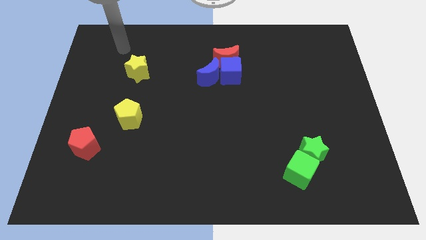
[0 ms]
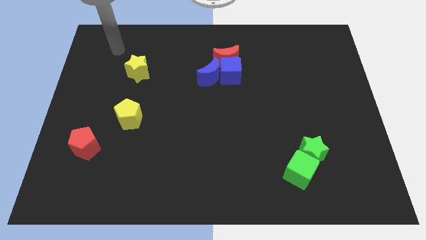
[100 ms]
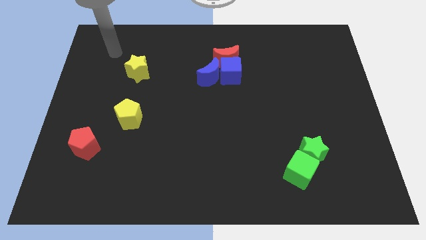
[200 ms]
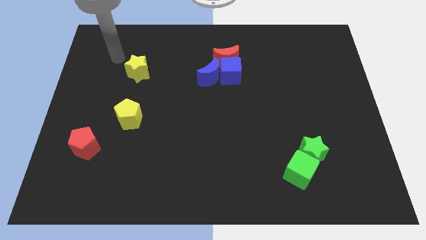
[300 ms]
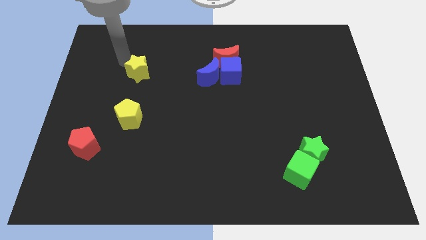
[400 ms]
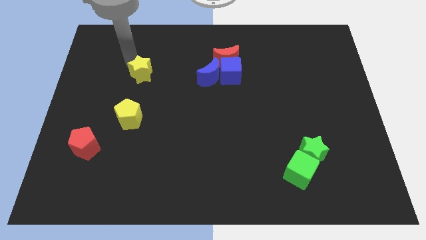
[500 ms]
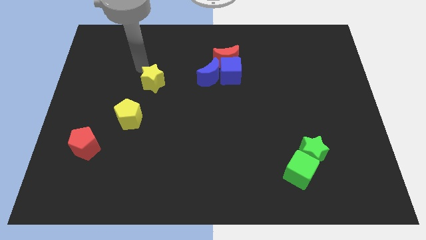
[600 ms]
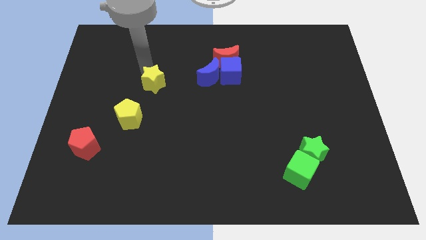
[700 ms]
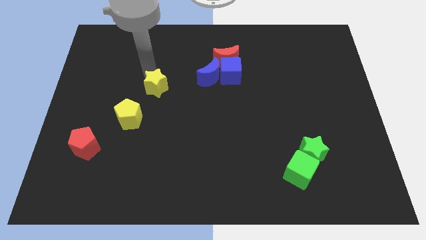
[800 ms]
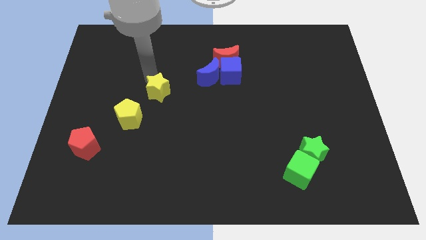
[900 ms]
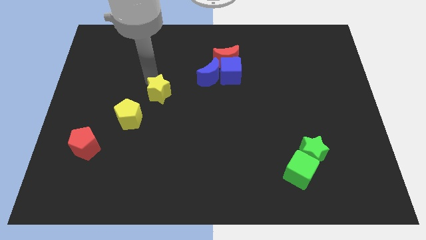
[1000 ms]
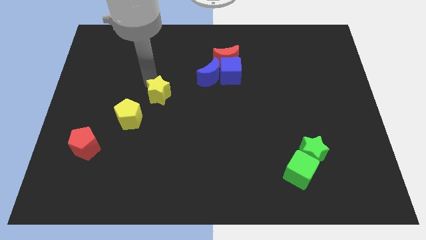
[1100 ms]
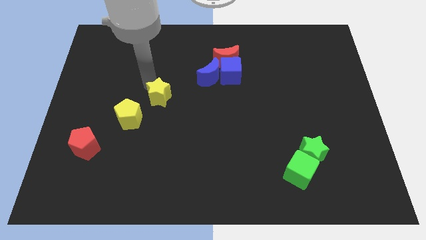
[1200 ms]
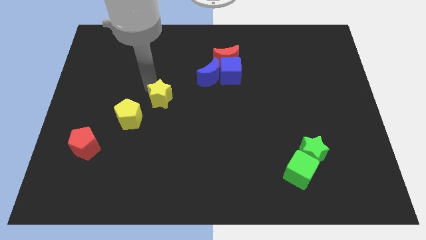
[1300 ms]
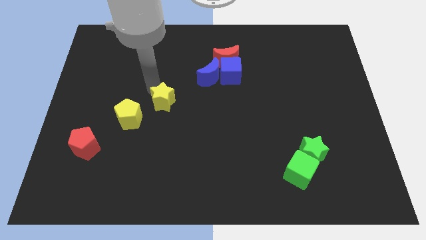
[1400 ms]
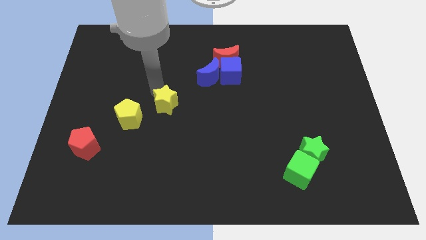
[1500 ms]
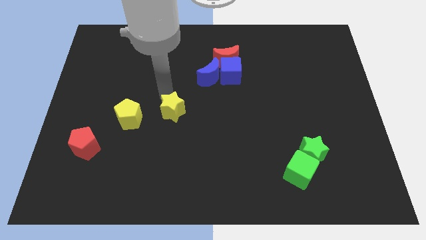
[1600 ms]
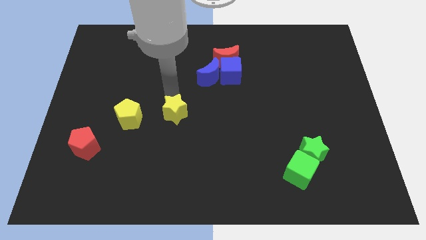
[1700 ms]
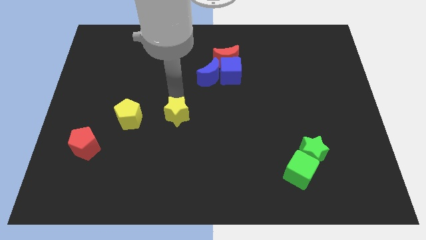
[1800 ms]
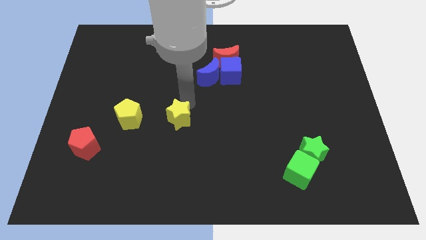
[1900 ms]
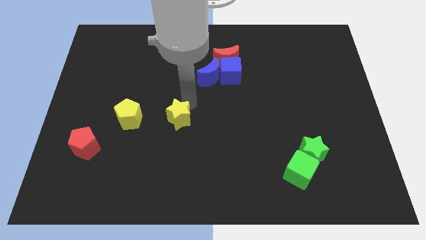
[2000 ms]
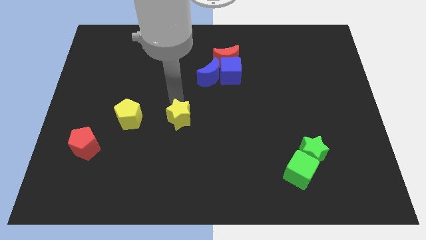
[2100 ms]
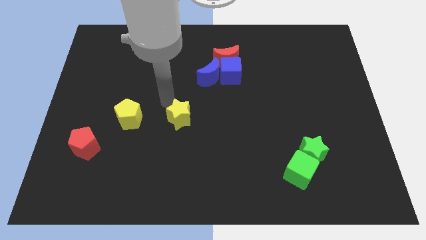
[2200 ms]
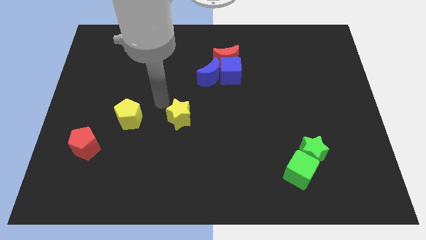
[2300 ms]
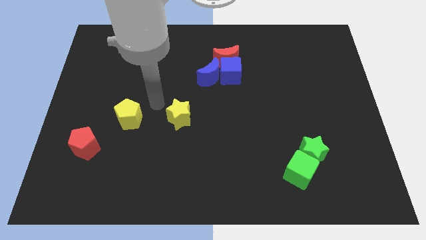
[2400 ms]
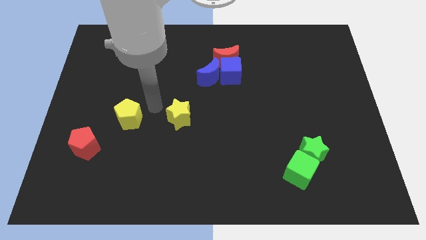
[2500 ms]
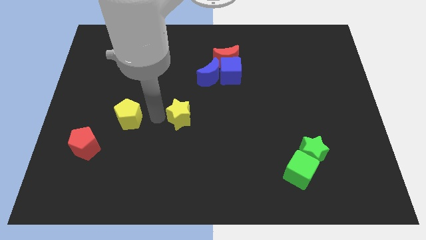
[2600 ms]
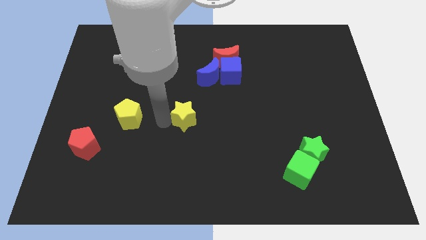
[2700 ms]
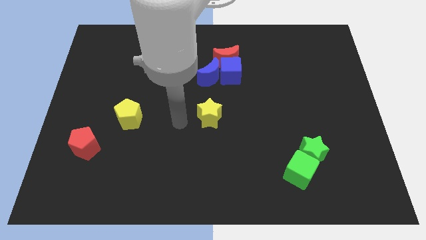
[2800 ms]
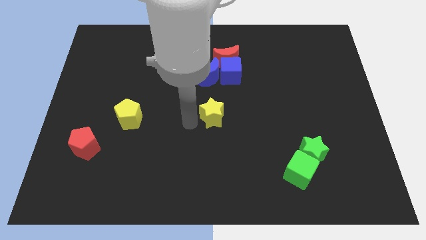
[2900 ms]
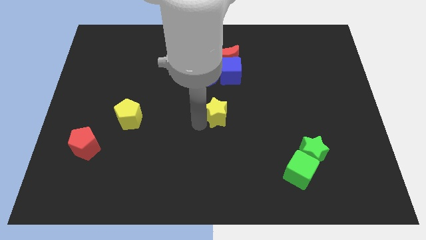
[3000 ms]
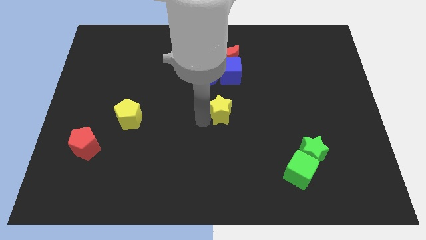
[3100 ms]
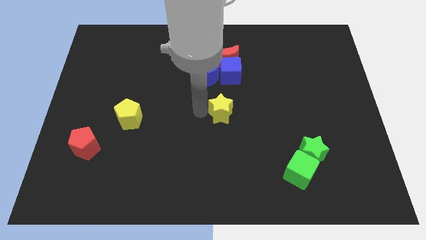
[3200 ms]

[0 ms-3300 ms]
place the yellow star at the center of the board

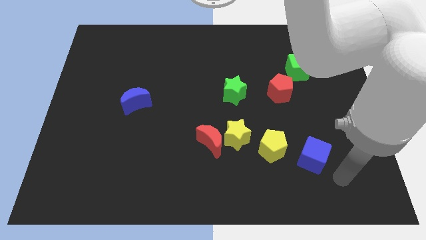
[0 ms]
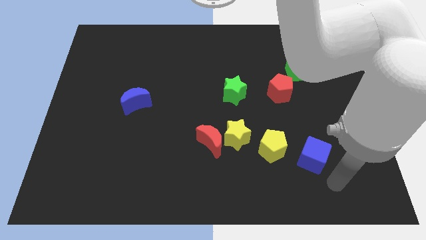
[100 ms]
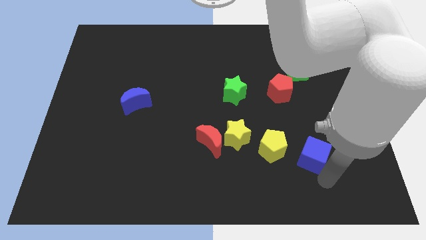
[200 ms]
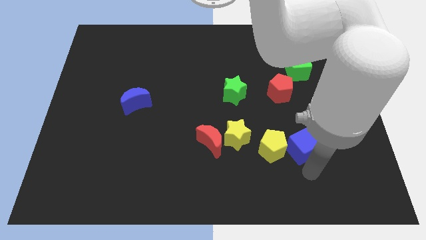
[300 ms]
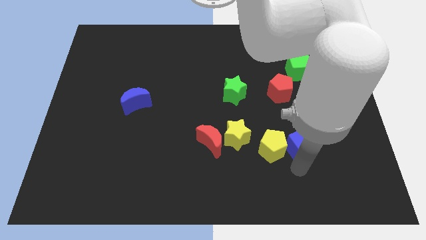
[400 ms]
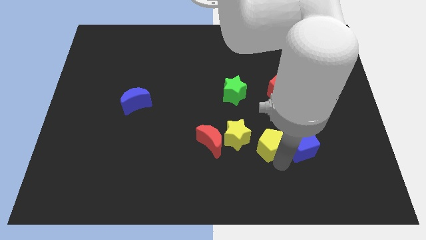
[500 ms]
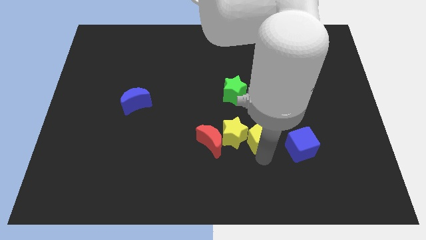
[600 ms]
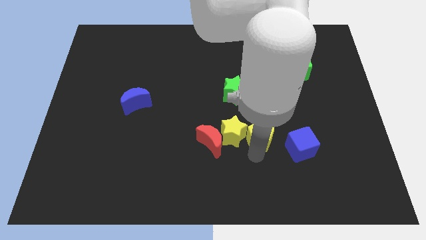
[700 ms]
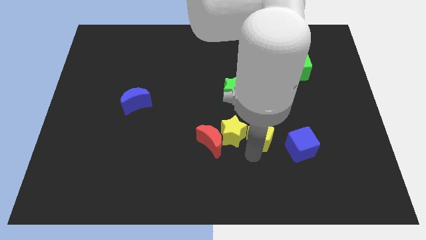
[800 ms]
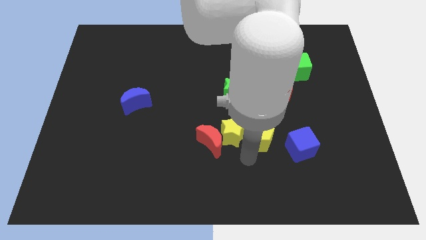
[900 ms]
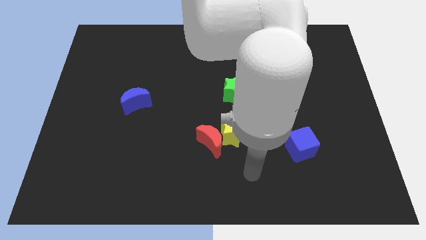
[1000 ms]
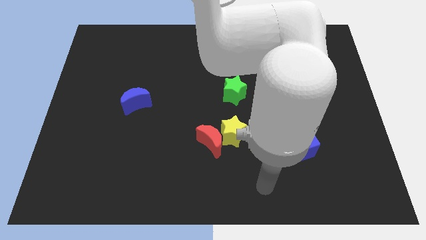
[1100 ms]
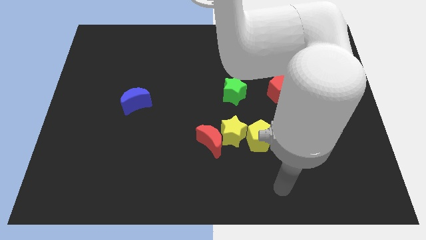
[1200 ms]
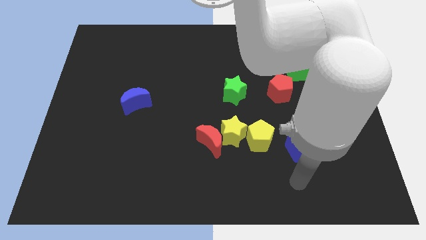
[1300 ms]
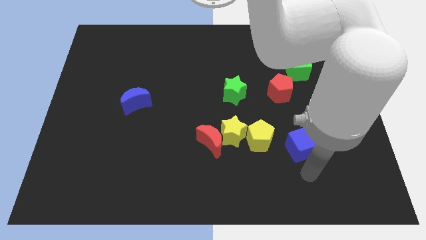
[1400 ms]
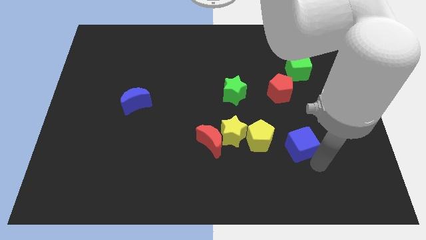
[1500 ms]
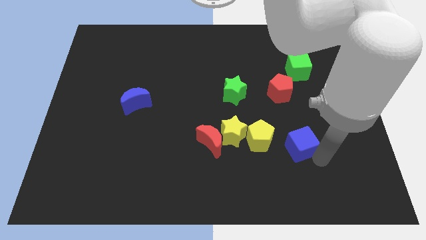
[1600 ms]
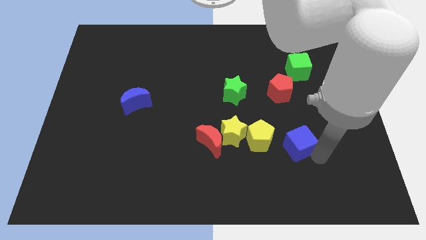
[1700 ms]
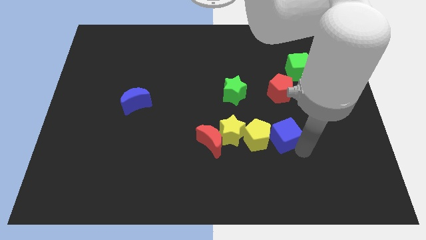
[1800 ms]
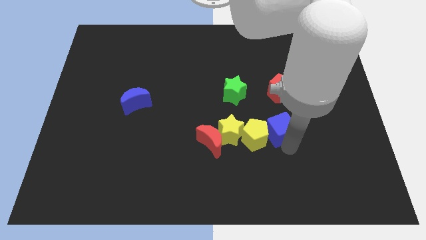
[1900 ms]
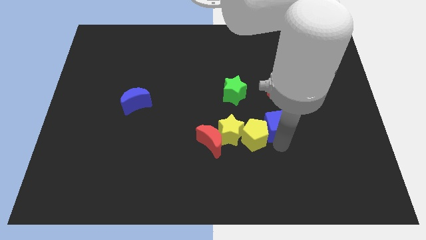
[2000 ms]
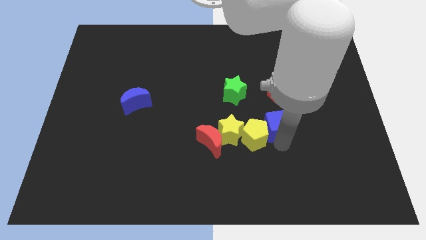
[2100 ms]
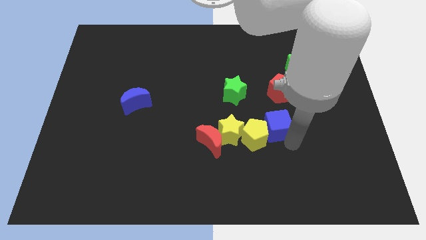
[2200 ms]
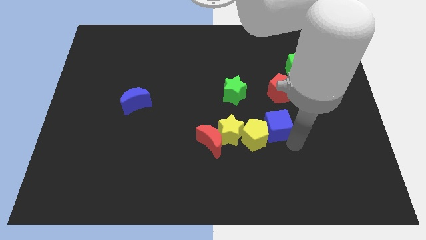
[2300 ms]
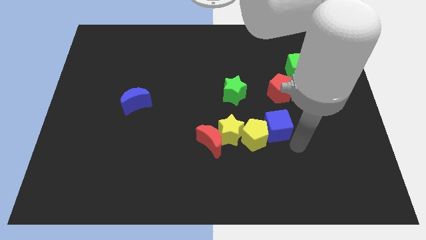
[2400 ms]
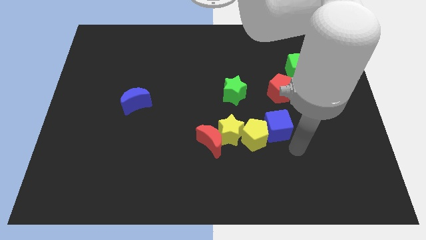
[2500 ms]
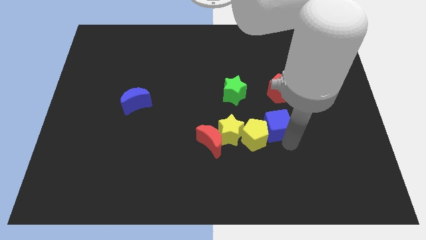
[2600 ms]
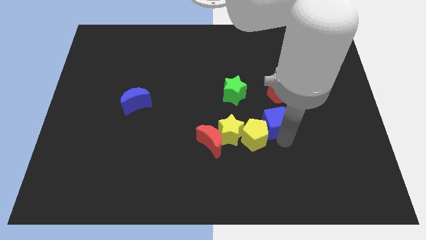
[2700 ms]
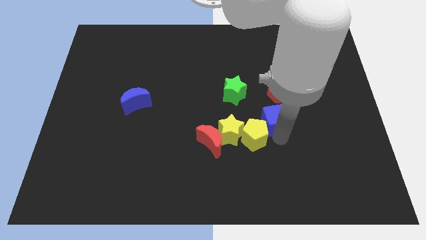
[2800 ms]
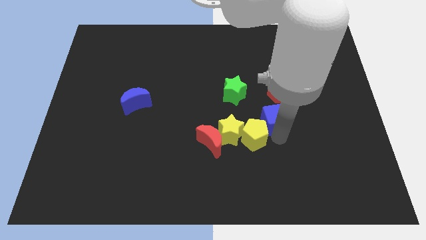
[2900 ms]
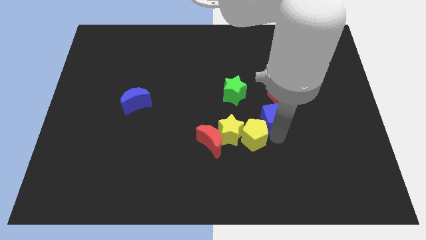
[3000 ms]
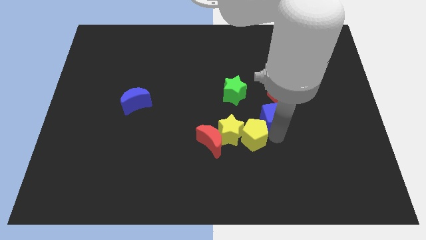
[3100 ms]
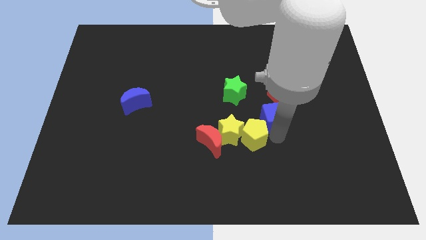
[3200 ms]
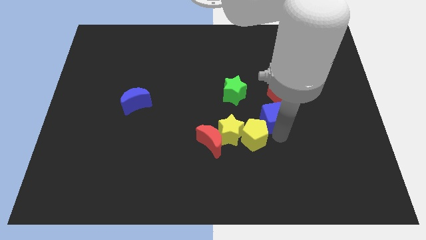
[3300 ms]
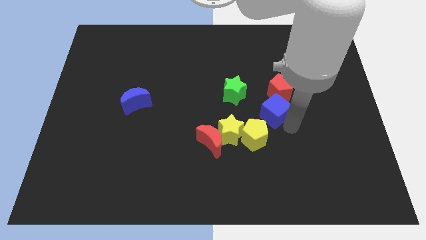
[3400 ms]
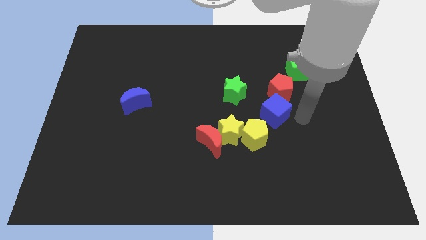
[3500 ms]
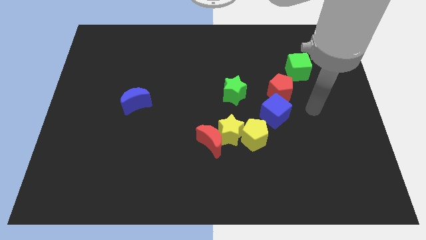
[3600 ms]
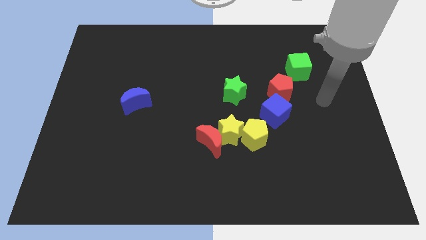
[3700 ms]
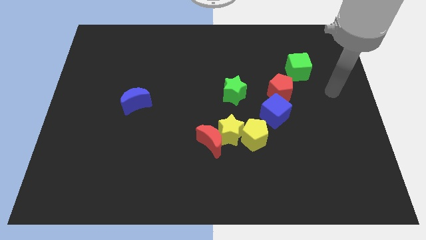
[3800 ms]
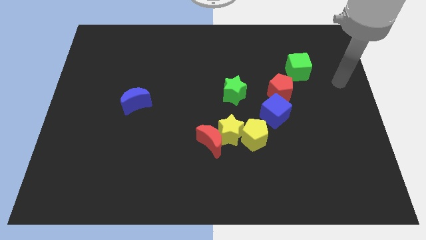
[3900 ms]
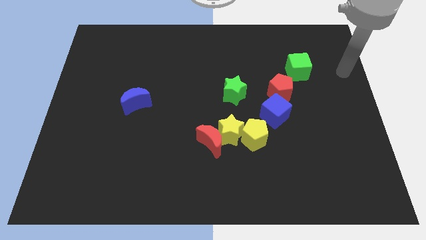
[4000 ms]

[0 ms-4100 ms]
place the blue cube in between the yellow pentagon and red pentagon

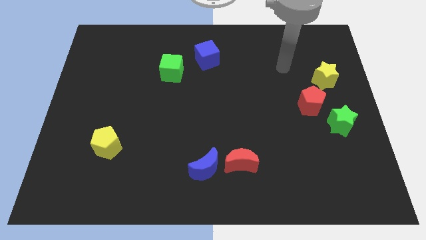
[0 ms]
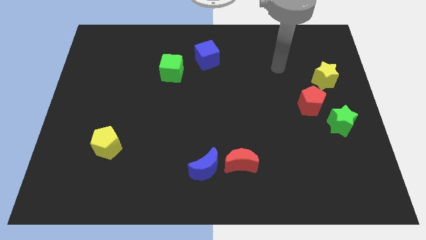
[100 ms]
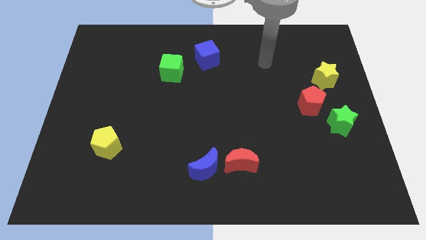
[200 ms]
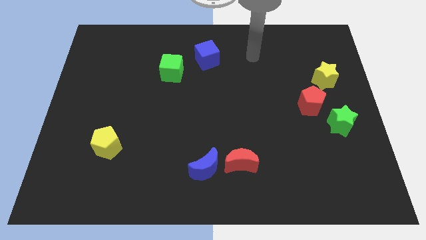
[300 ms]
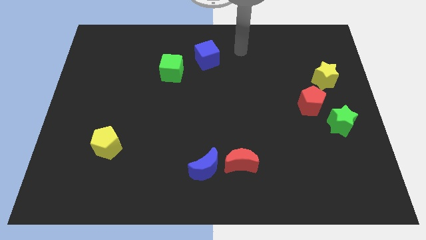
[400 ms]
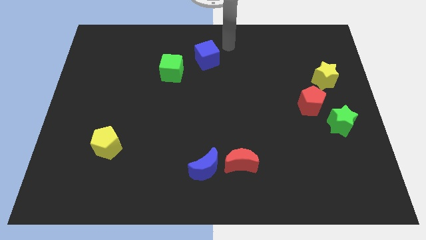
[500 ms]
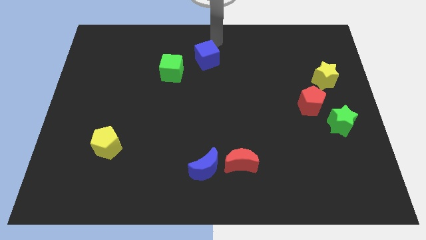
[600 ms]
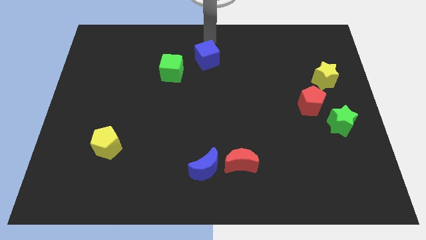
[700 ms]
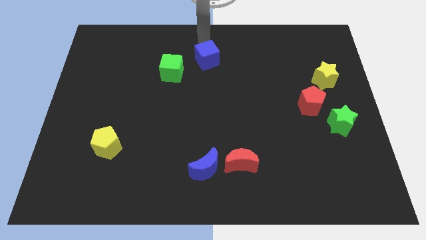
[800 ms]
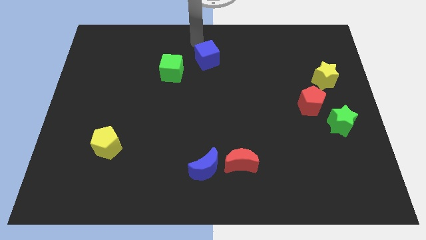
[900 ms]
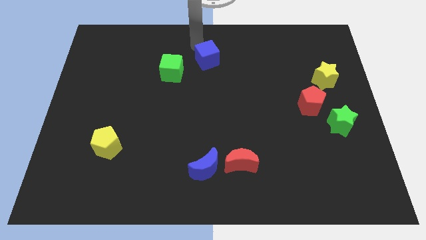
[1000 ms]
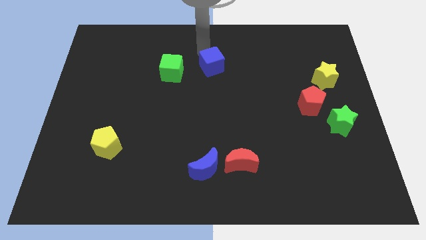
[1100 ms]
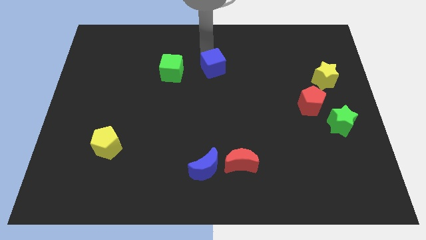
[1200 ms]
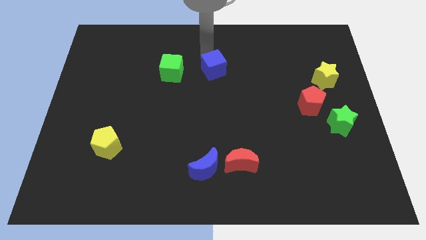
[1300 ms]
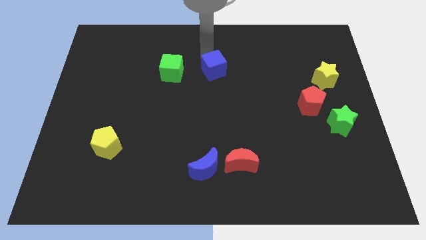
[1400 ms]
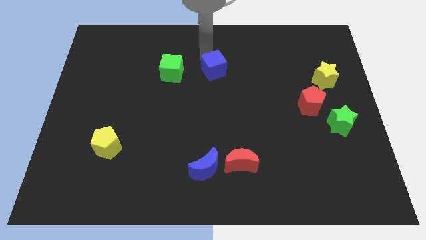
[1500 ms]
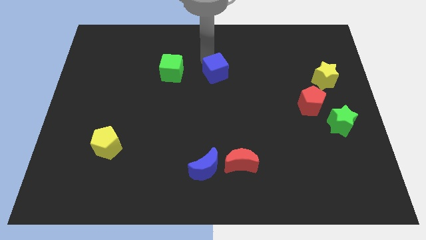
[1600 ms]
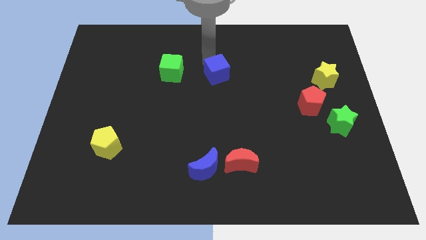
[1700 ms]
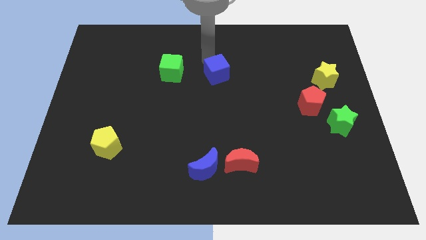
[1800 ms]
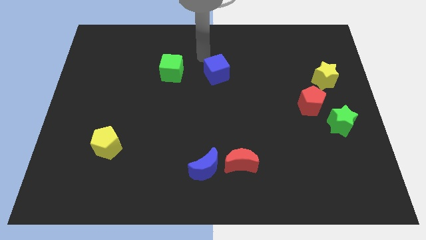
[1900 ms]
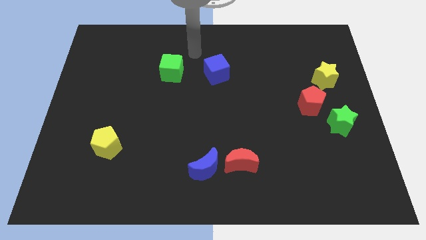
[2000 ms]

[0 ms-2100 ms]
move the blue cube at the right side of the green cube
